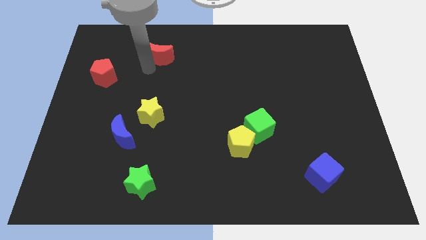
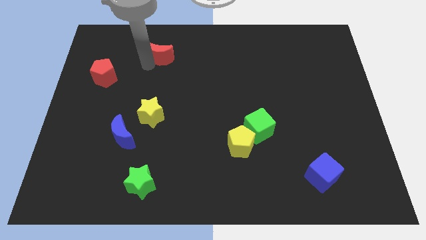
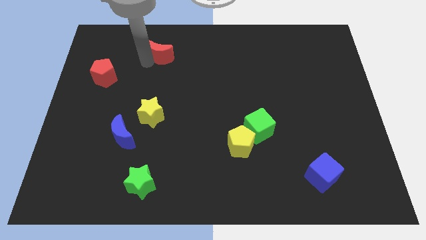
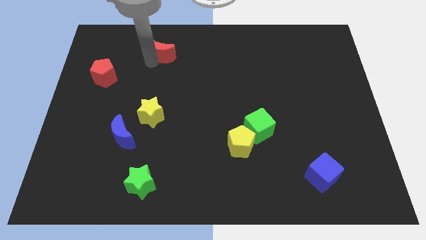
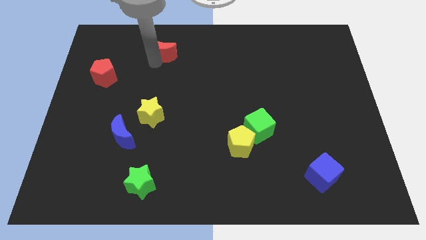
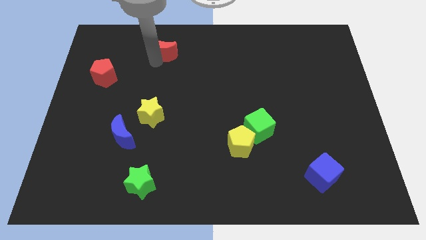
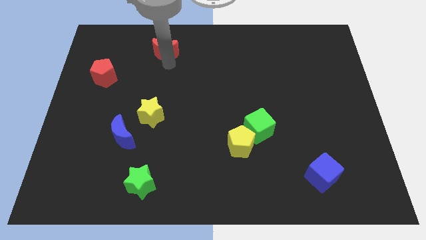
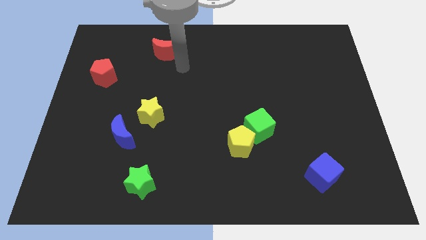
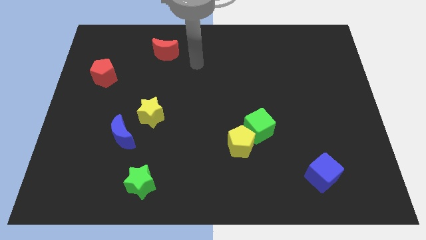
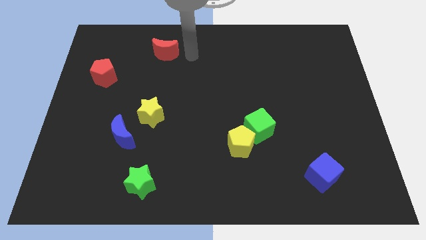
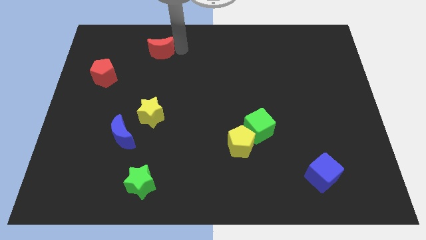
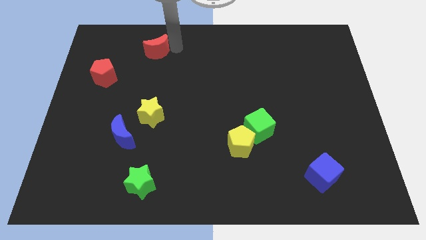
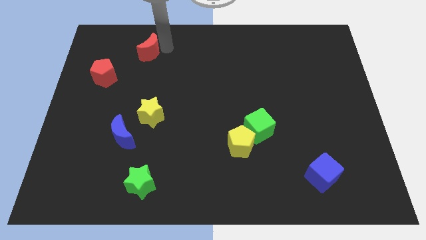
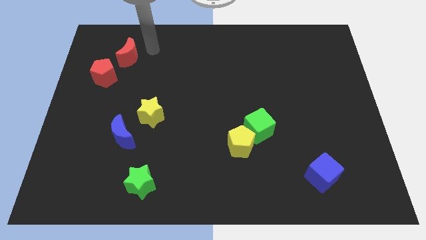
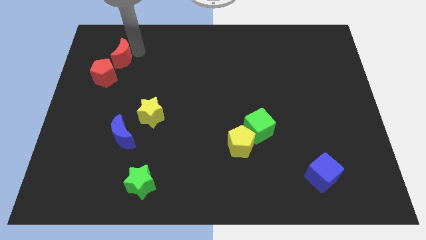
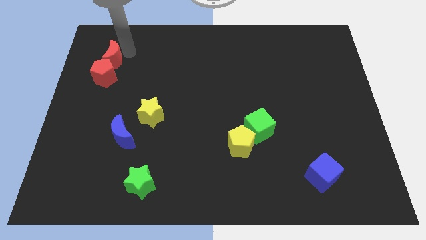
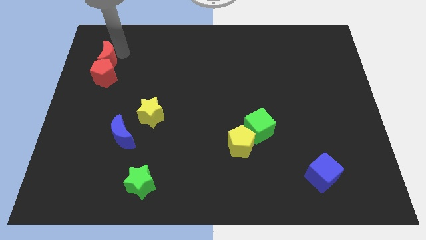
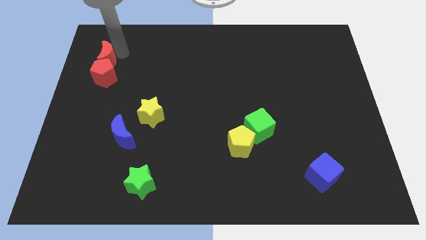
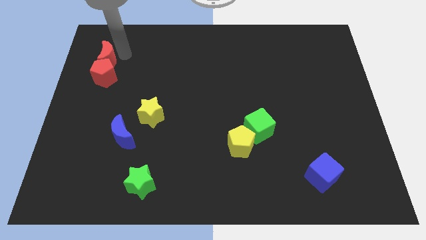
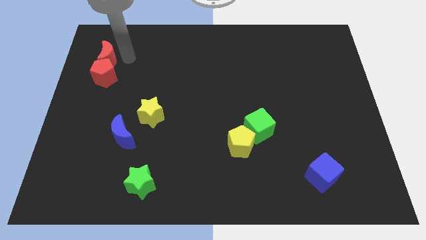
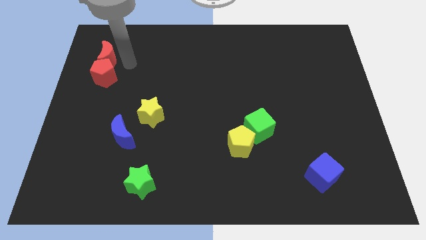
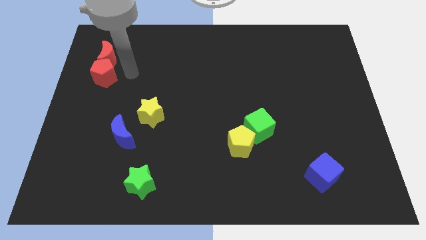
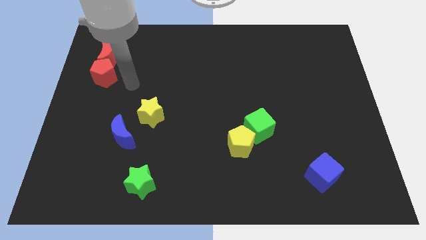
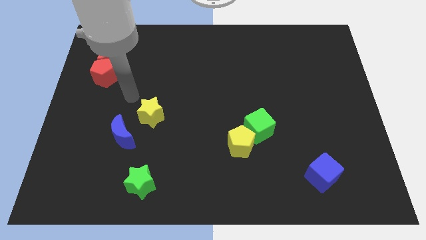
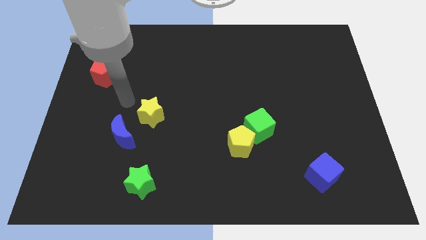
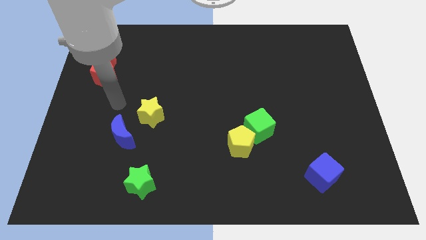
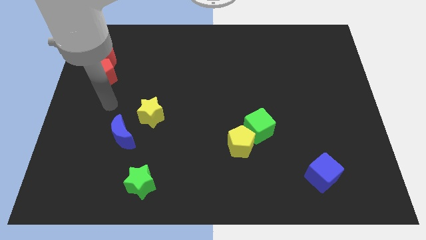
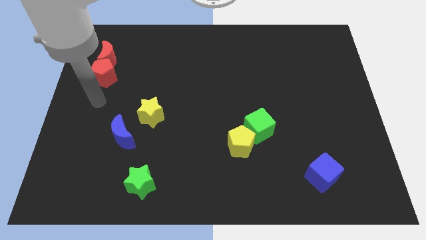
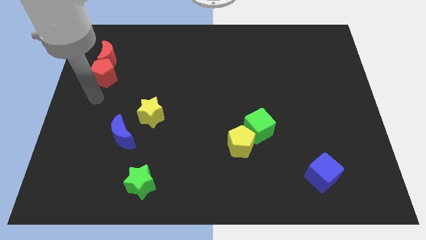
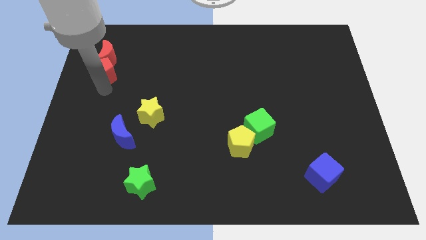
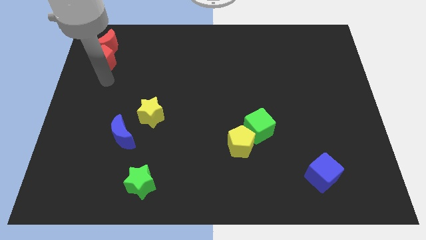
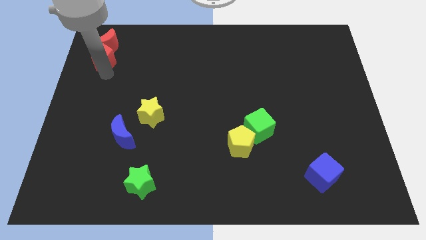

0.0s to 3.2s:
move the red moon above the red pentagon

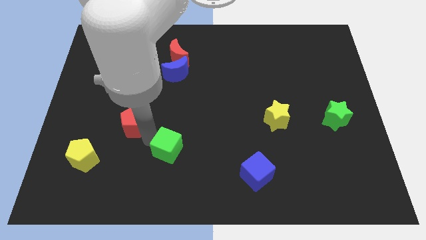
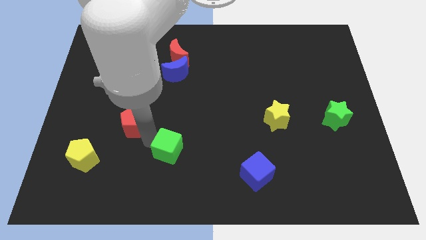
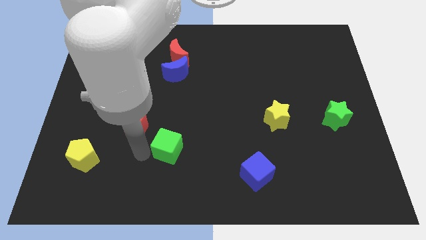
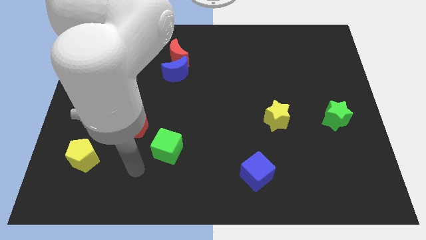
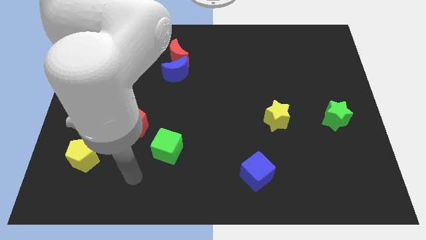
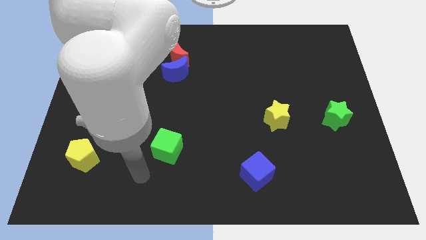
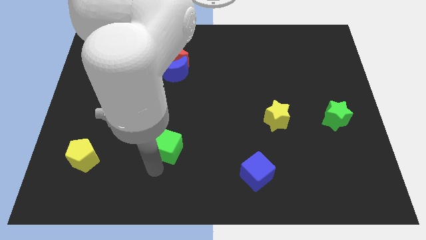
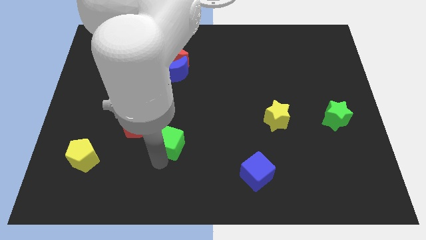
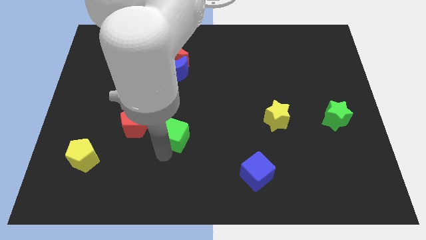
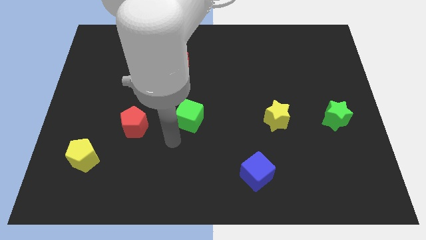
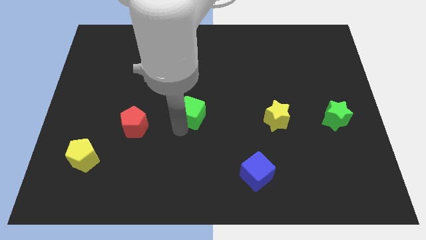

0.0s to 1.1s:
move the green cube to the left side of the yellow star

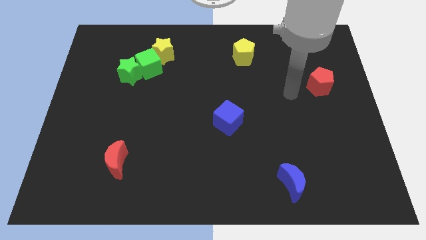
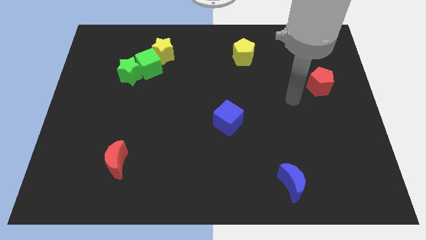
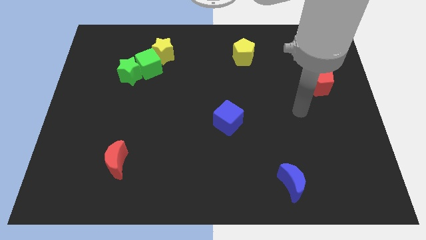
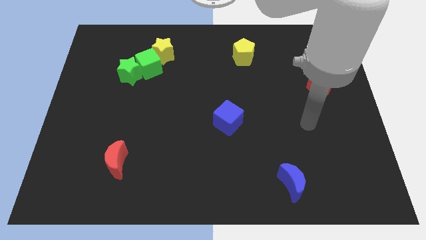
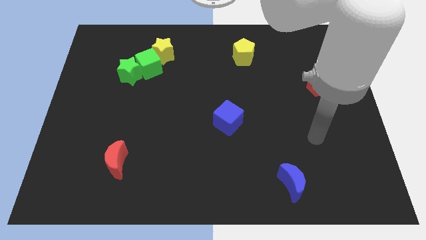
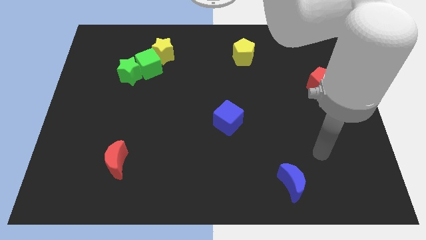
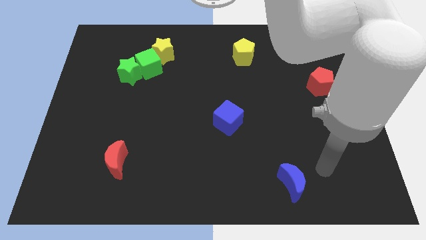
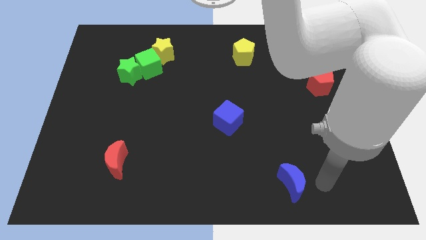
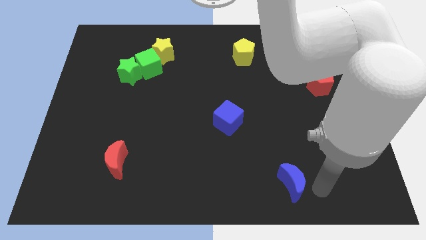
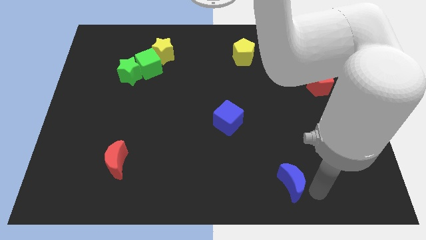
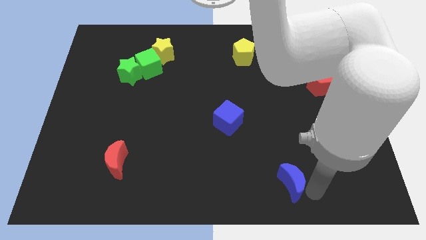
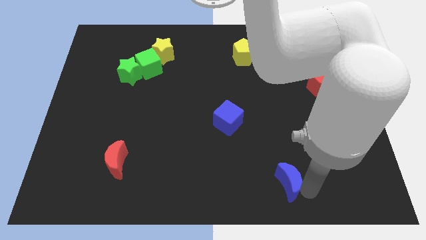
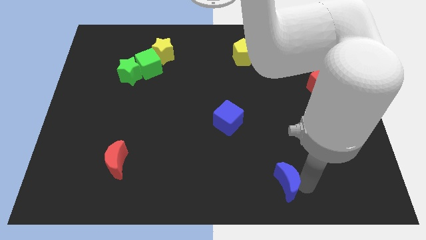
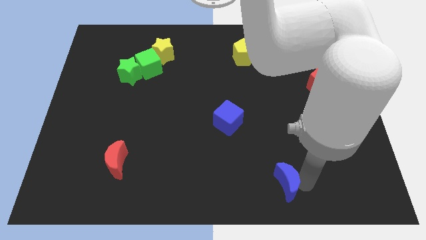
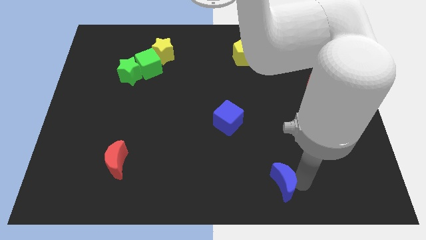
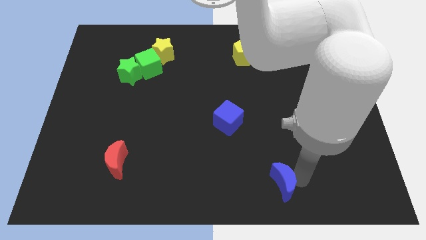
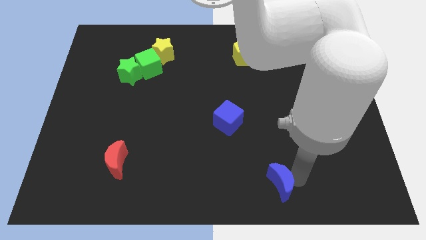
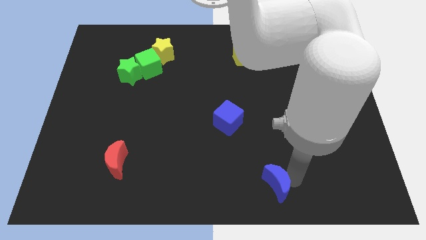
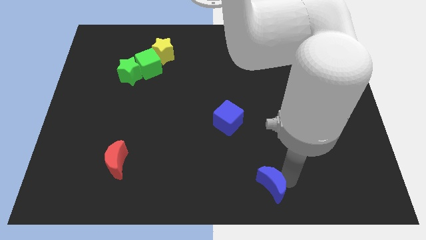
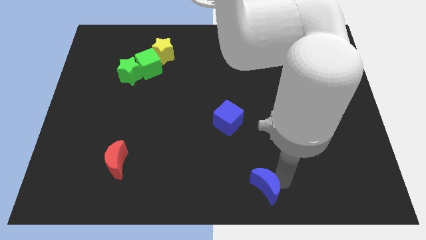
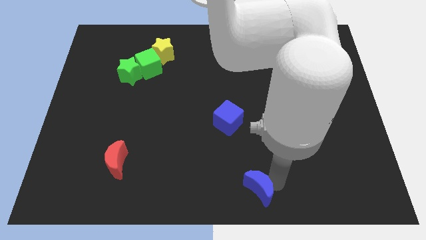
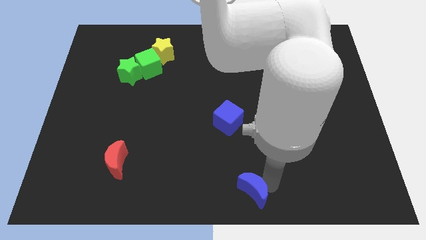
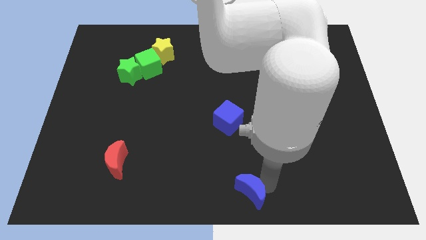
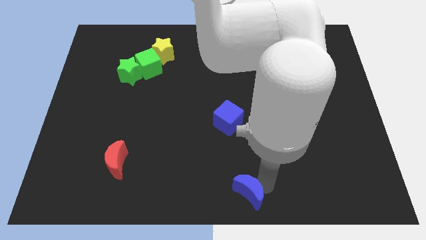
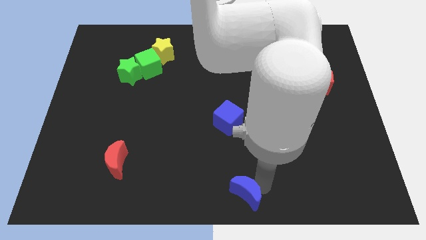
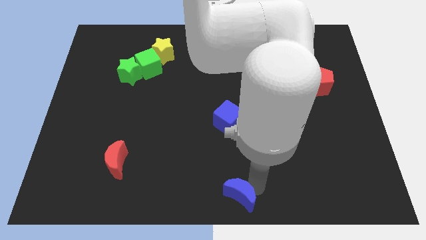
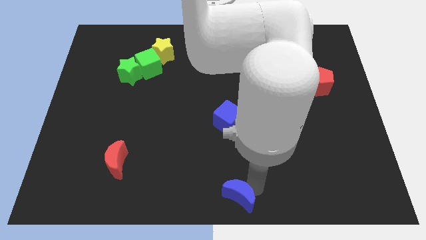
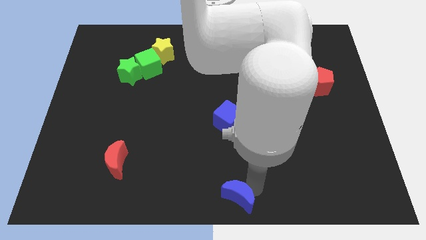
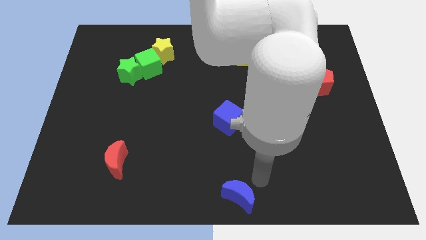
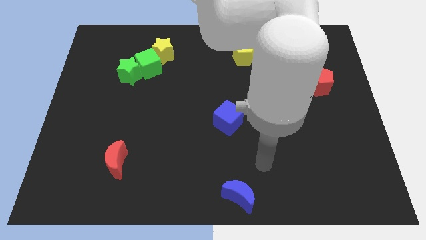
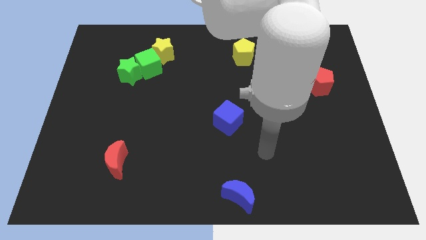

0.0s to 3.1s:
move blue moon to the bottom center of the board

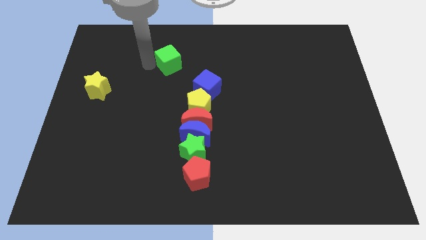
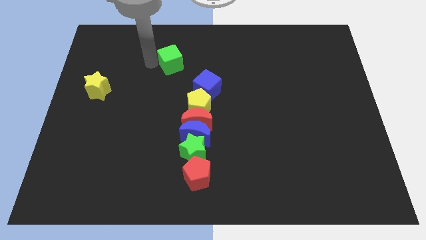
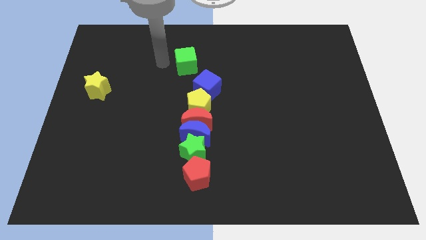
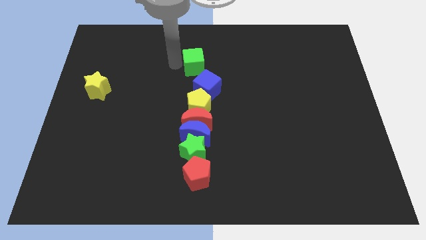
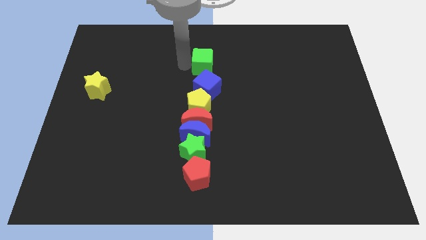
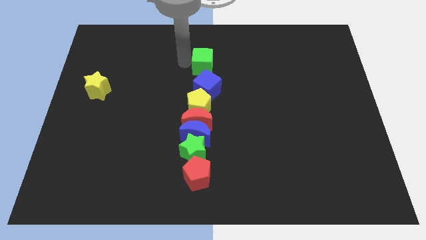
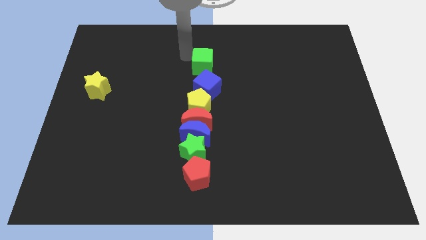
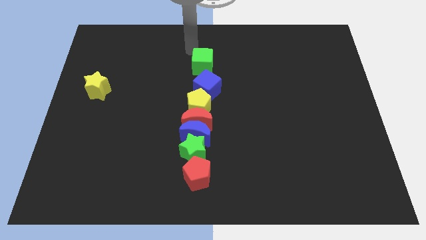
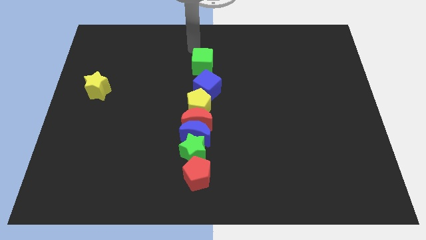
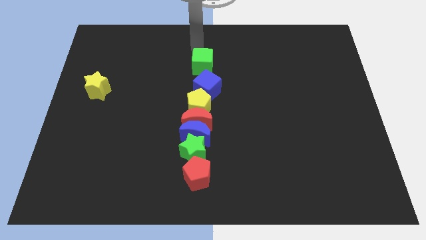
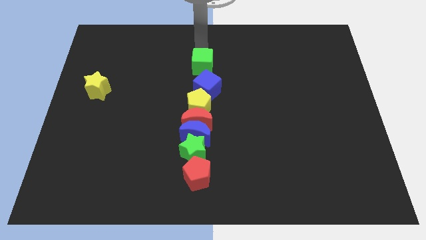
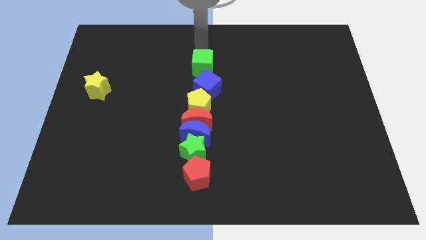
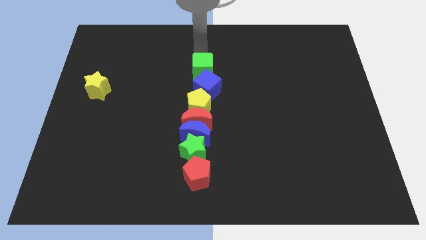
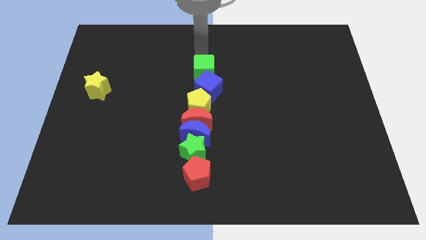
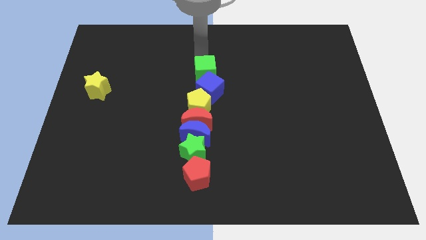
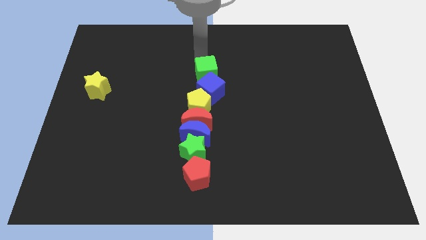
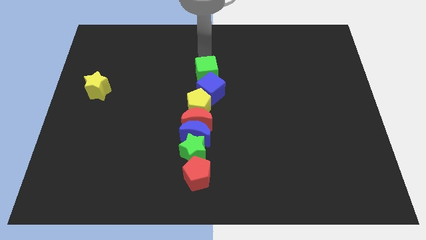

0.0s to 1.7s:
push the green cube into the blue cube
